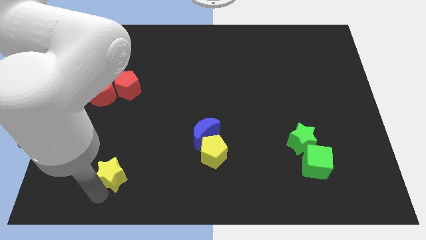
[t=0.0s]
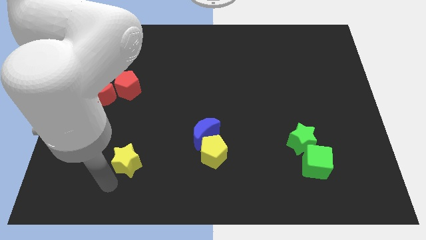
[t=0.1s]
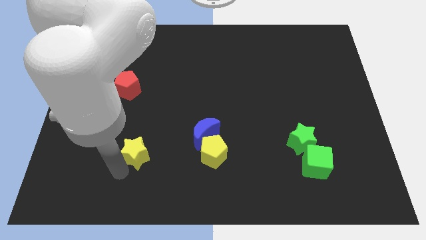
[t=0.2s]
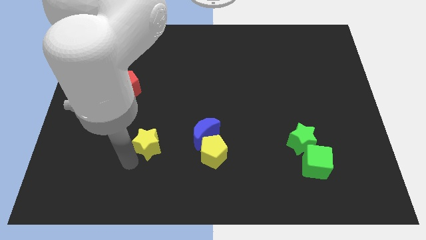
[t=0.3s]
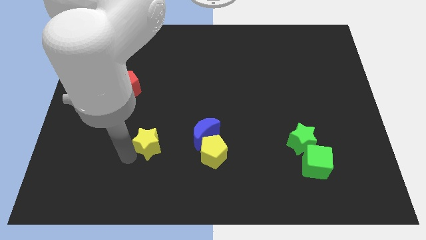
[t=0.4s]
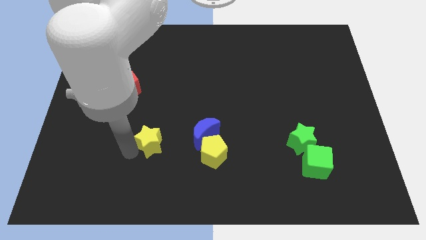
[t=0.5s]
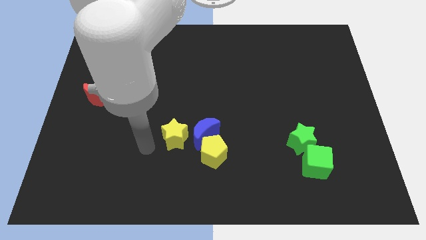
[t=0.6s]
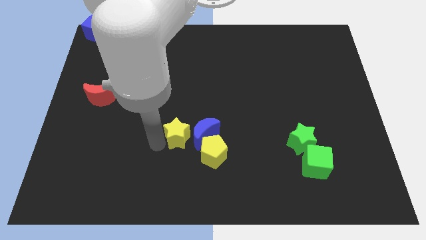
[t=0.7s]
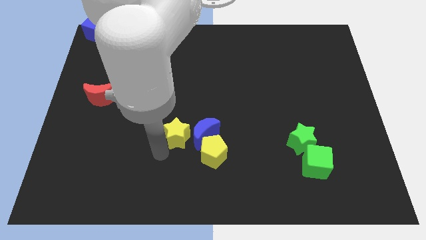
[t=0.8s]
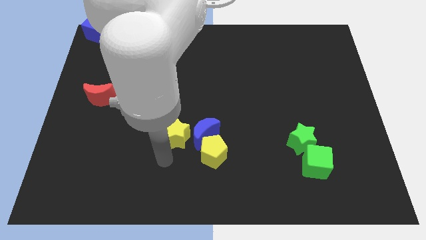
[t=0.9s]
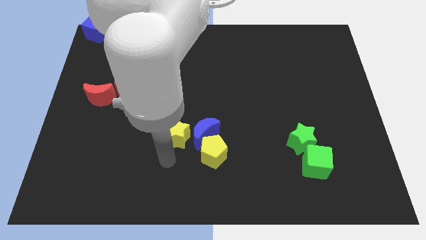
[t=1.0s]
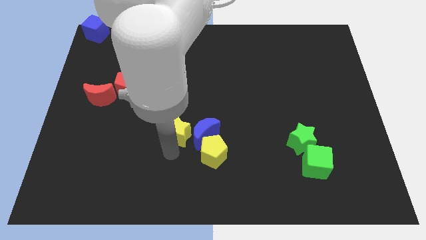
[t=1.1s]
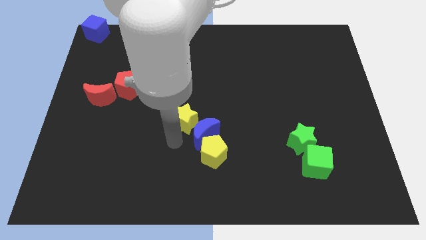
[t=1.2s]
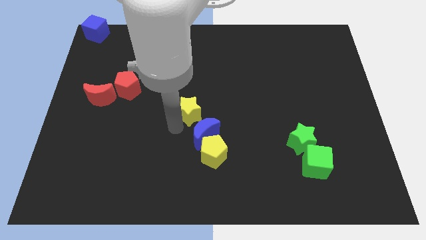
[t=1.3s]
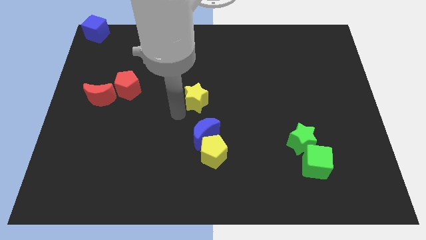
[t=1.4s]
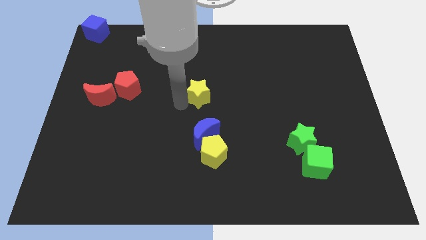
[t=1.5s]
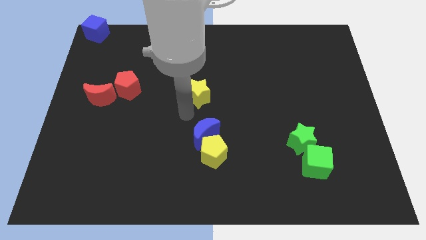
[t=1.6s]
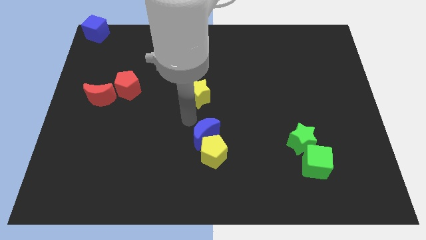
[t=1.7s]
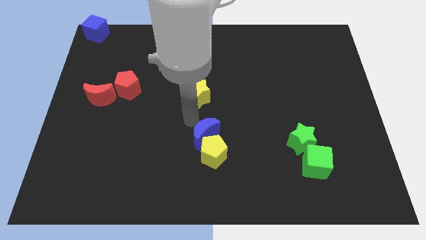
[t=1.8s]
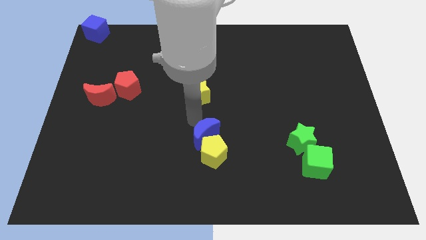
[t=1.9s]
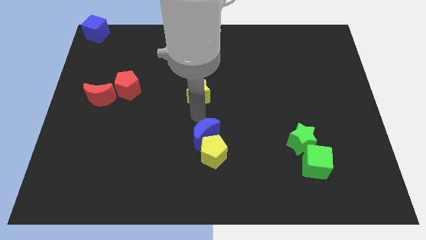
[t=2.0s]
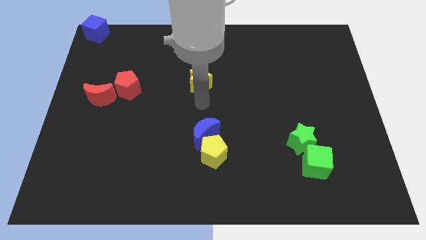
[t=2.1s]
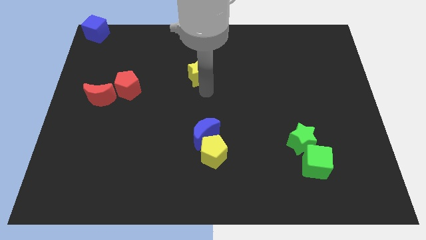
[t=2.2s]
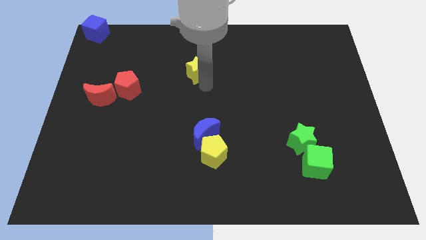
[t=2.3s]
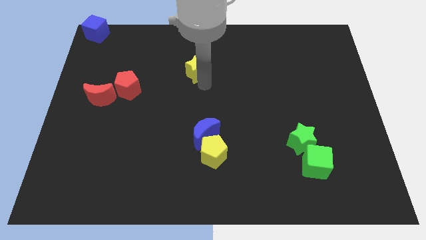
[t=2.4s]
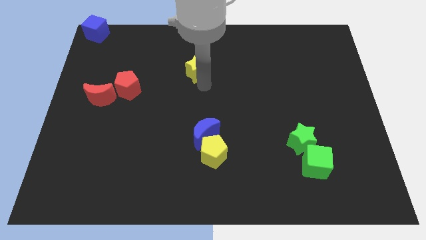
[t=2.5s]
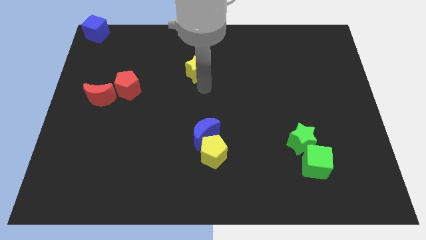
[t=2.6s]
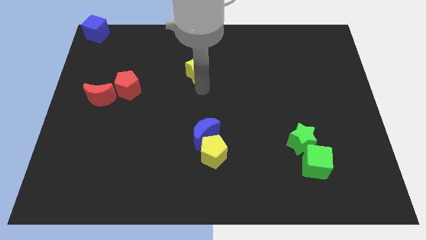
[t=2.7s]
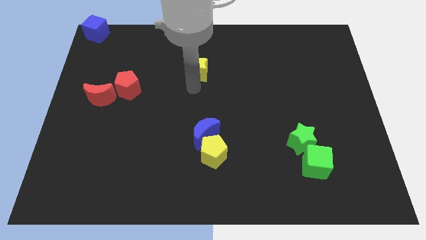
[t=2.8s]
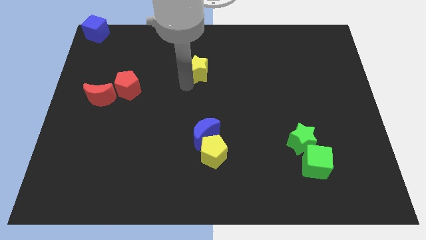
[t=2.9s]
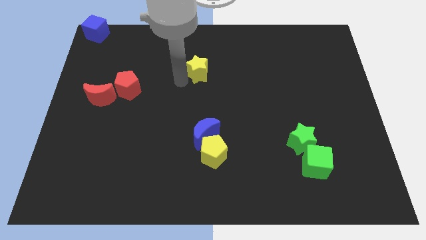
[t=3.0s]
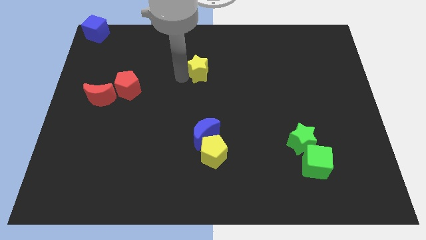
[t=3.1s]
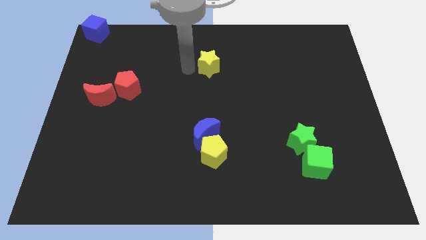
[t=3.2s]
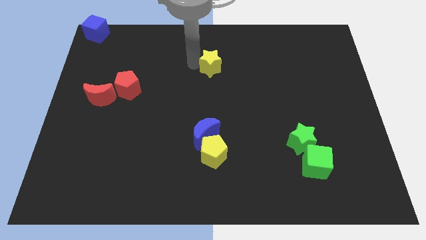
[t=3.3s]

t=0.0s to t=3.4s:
push the yellow star parallel to the blue moon

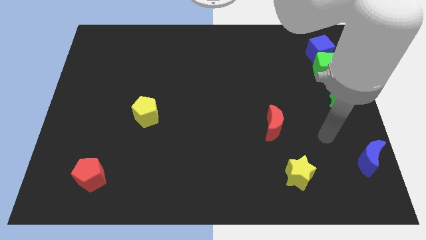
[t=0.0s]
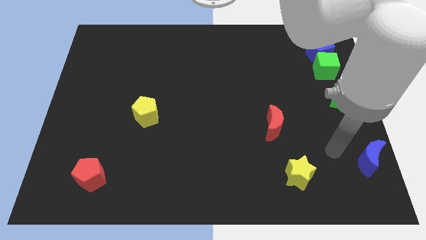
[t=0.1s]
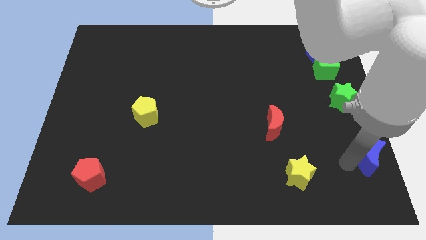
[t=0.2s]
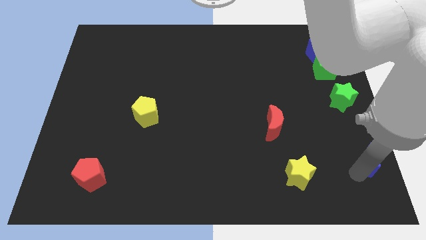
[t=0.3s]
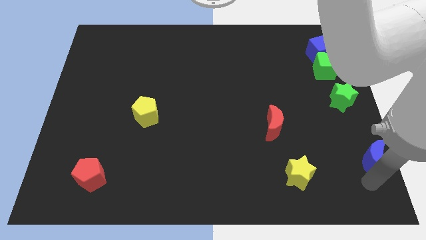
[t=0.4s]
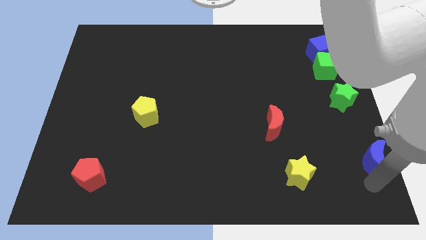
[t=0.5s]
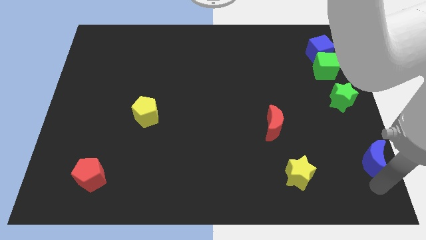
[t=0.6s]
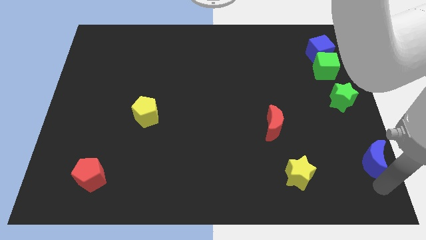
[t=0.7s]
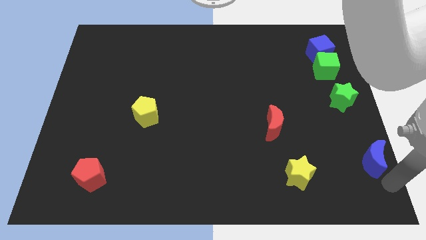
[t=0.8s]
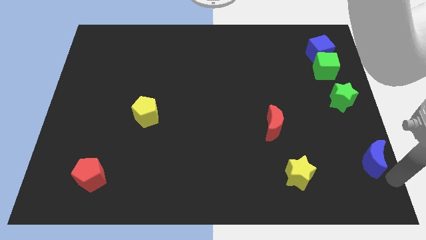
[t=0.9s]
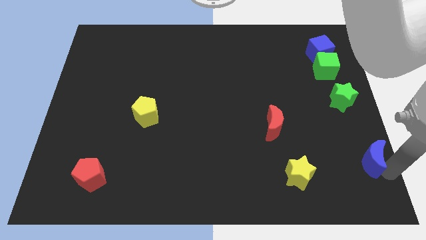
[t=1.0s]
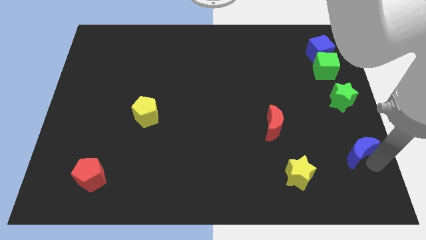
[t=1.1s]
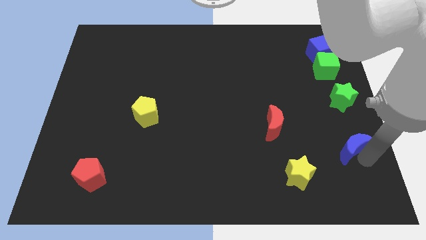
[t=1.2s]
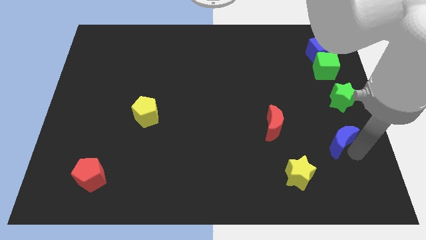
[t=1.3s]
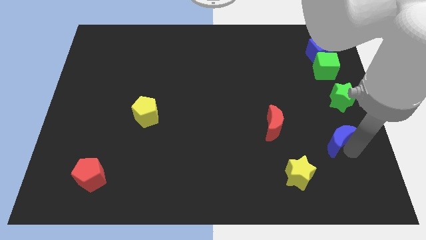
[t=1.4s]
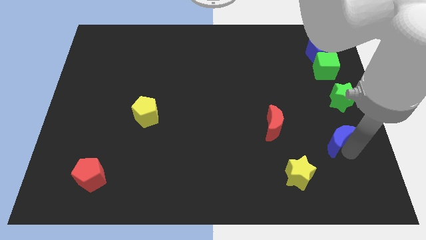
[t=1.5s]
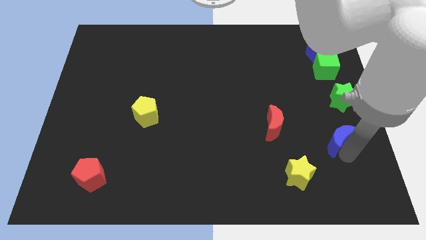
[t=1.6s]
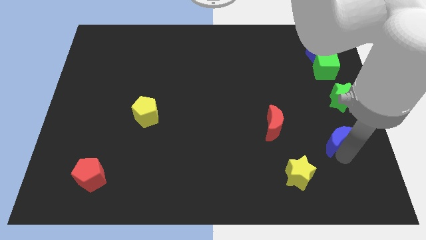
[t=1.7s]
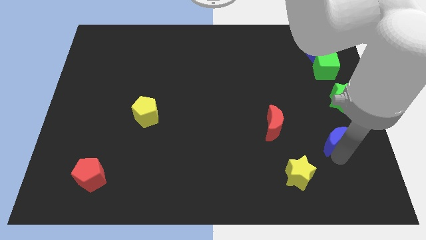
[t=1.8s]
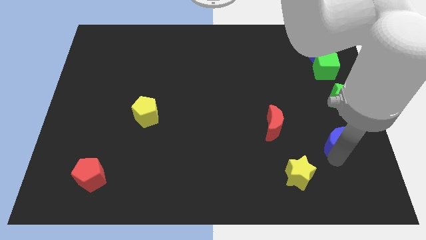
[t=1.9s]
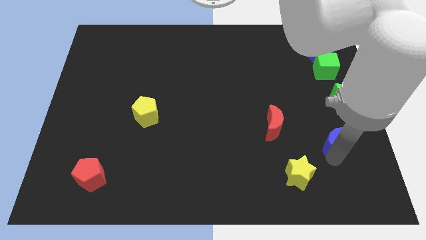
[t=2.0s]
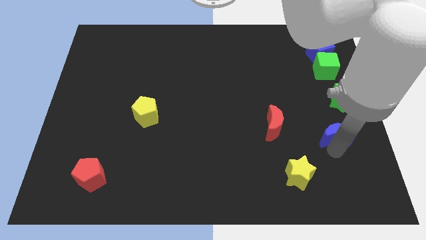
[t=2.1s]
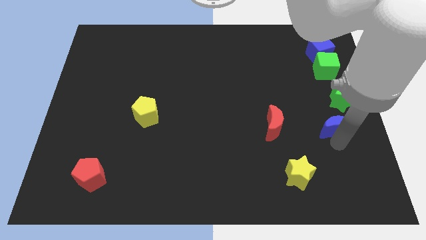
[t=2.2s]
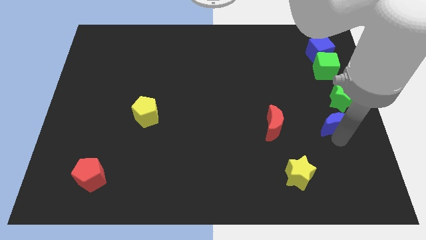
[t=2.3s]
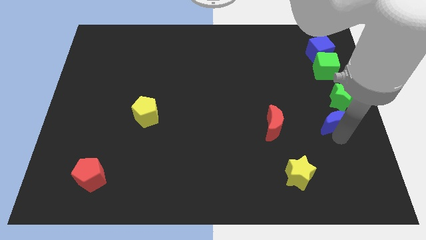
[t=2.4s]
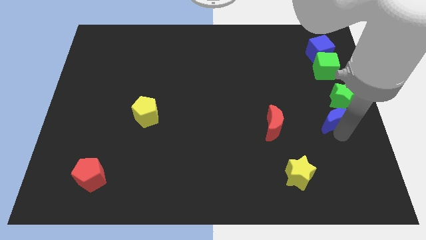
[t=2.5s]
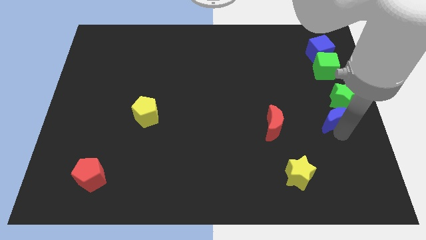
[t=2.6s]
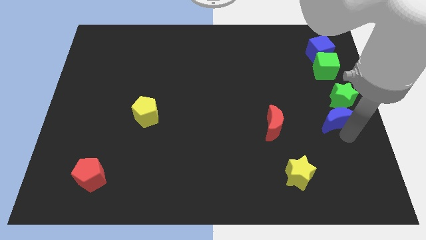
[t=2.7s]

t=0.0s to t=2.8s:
place the blue crescent below the green star

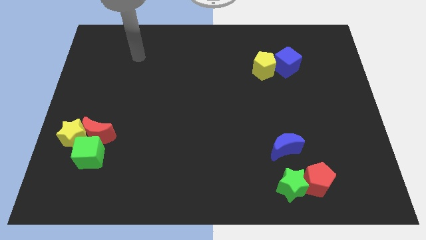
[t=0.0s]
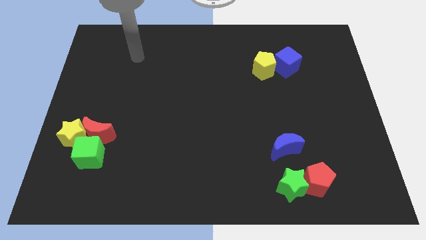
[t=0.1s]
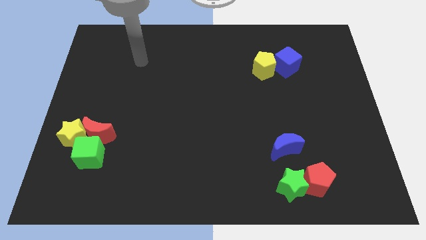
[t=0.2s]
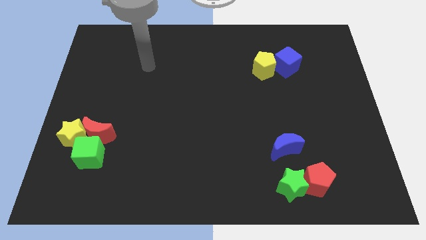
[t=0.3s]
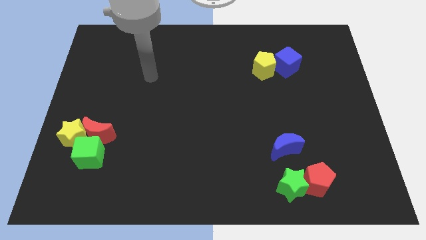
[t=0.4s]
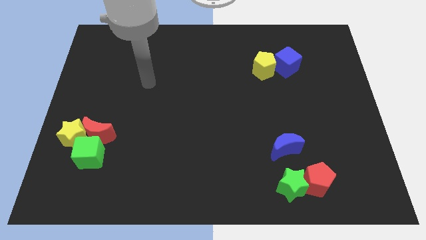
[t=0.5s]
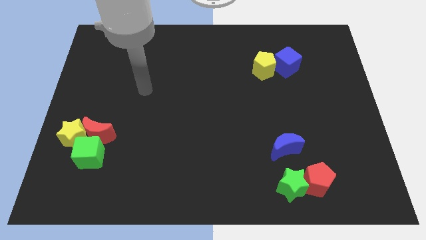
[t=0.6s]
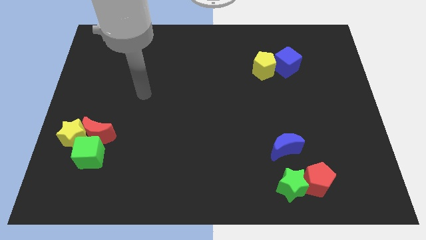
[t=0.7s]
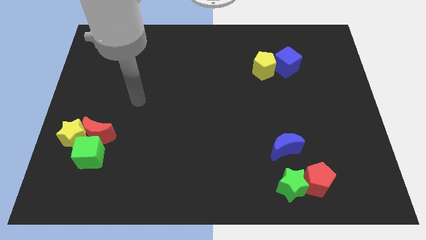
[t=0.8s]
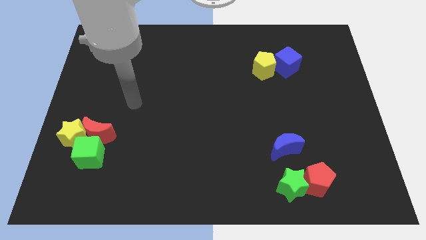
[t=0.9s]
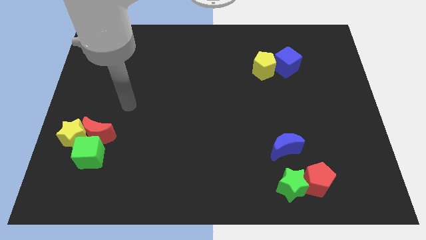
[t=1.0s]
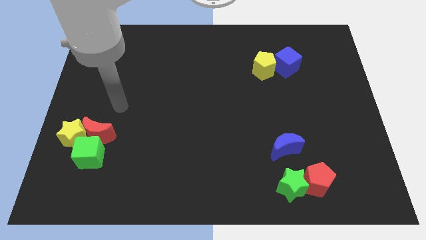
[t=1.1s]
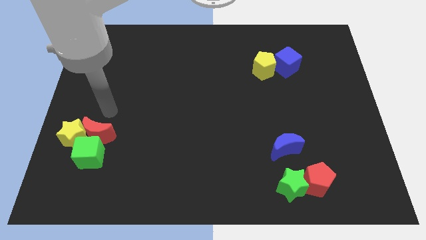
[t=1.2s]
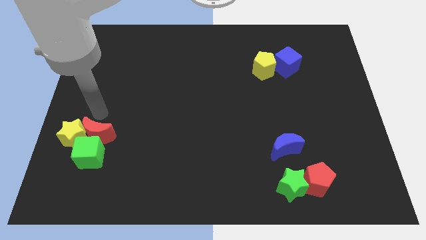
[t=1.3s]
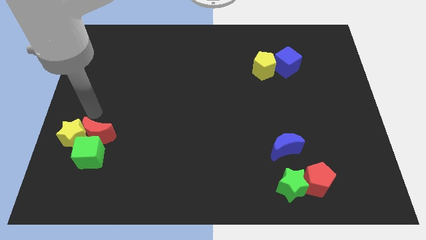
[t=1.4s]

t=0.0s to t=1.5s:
place your arm above the red moon

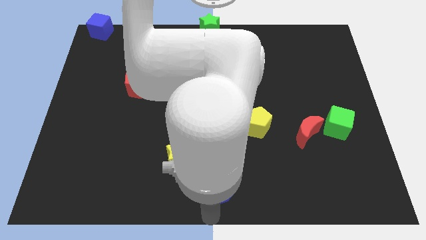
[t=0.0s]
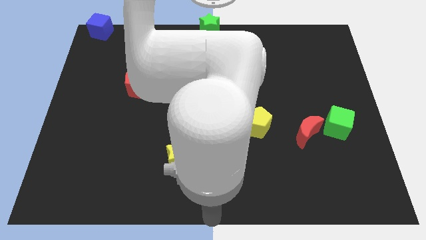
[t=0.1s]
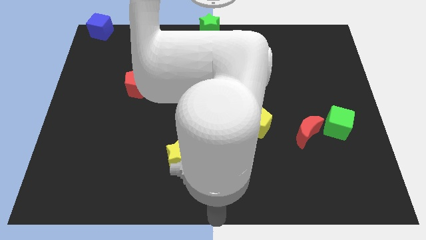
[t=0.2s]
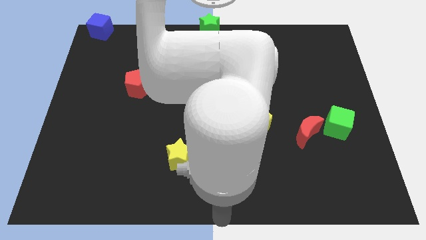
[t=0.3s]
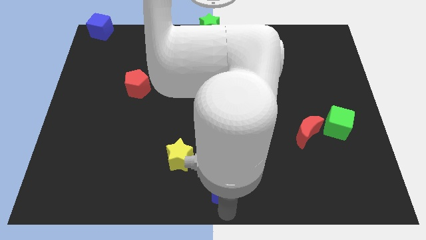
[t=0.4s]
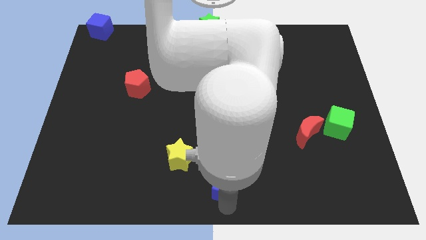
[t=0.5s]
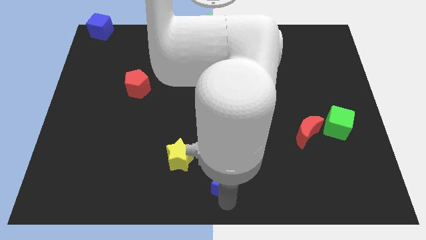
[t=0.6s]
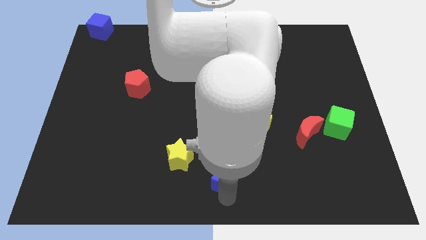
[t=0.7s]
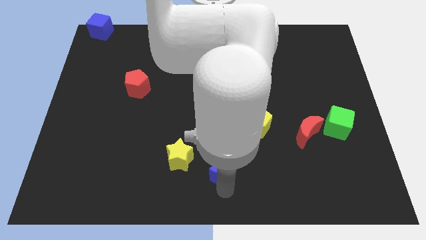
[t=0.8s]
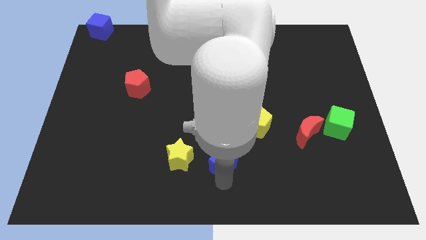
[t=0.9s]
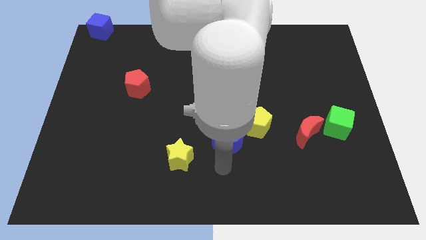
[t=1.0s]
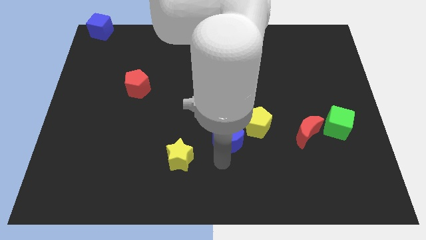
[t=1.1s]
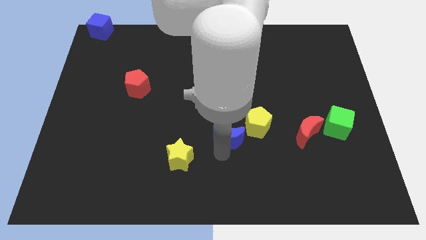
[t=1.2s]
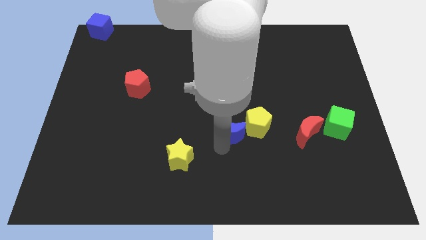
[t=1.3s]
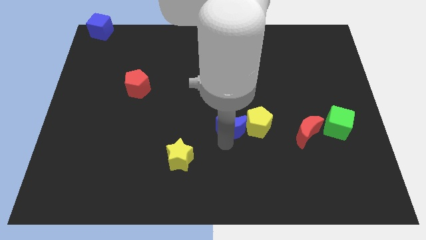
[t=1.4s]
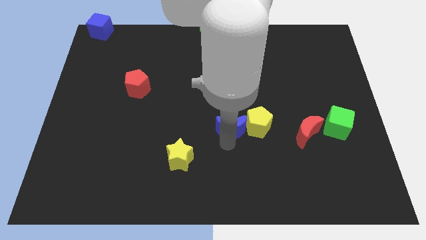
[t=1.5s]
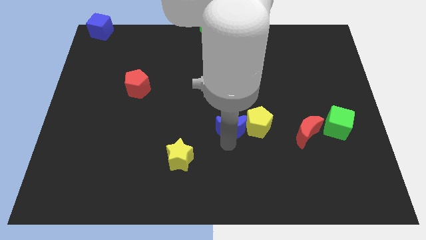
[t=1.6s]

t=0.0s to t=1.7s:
push blue crescent beside yellow pentagon
